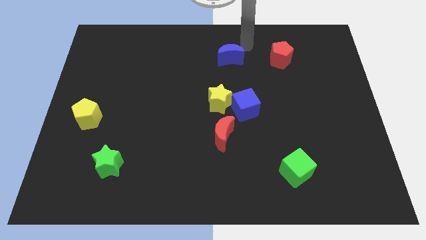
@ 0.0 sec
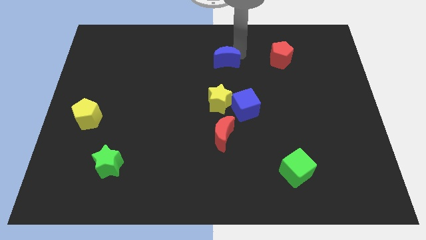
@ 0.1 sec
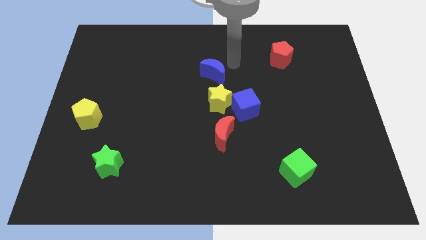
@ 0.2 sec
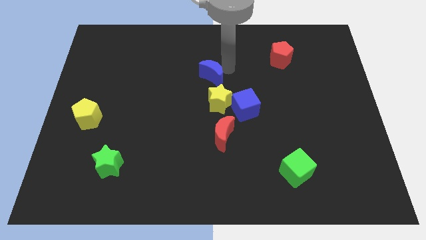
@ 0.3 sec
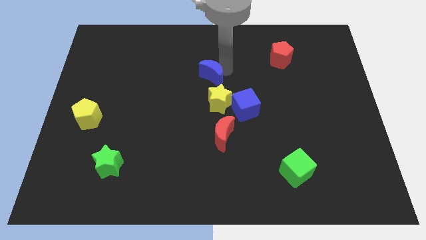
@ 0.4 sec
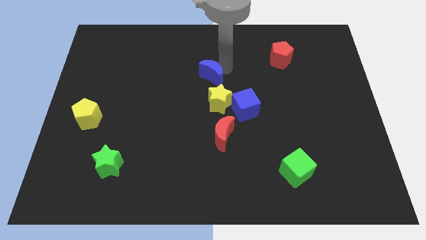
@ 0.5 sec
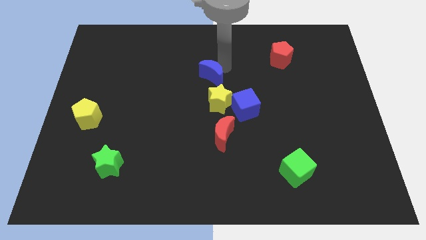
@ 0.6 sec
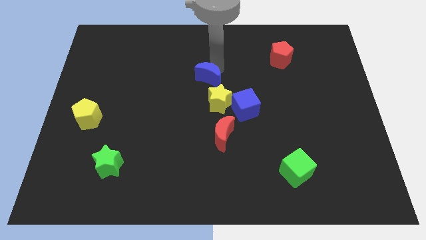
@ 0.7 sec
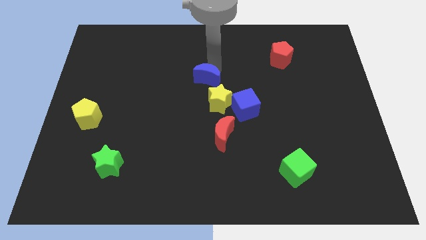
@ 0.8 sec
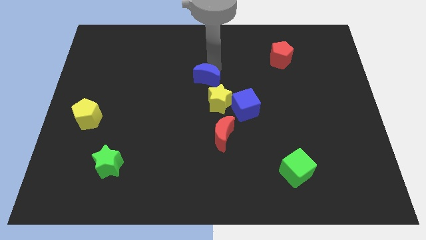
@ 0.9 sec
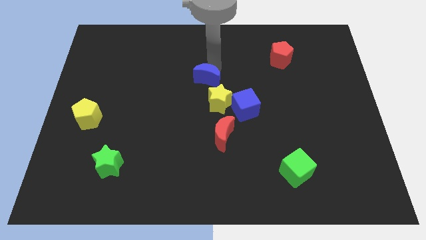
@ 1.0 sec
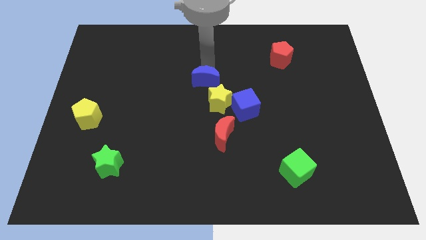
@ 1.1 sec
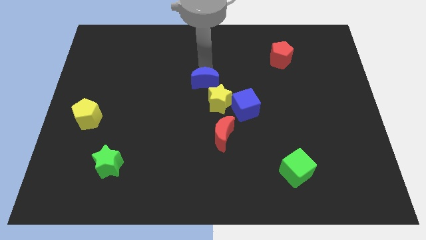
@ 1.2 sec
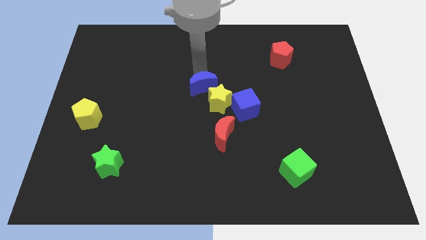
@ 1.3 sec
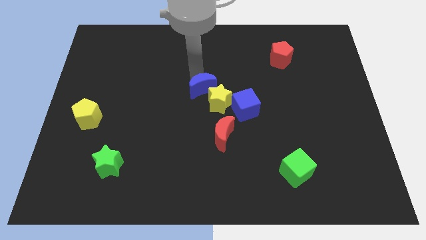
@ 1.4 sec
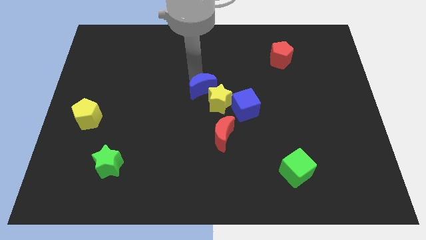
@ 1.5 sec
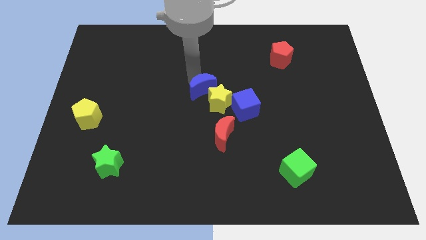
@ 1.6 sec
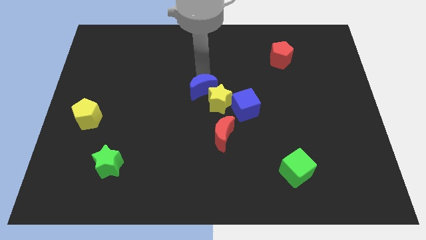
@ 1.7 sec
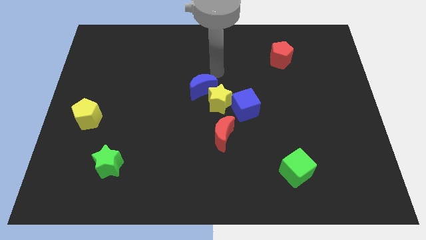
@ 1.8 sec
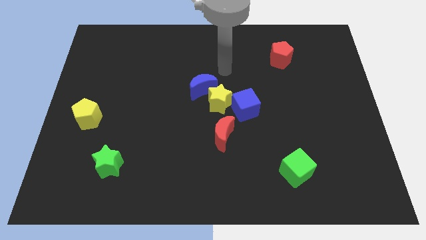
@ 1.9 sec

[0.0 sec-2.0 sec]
push the blue crescent close to the yellow star

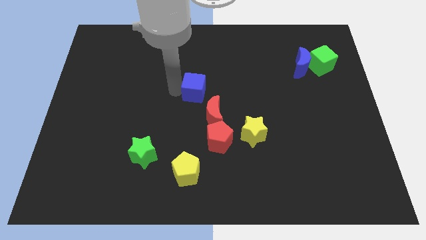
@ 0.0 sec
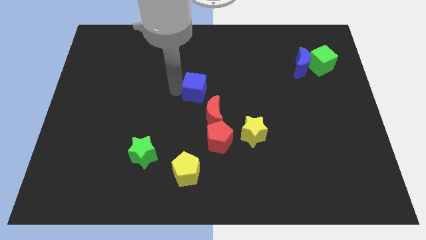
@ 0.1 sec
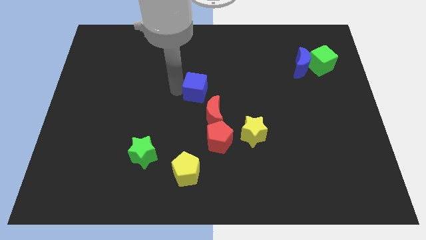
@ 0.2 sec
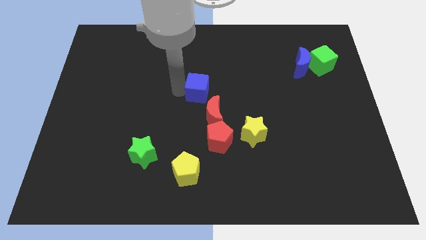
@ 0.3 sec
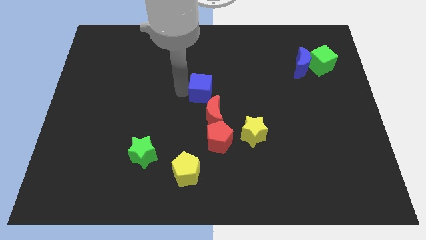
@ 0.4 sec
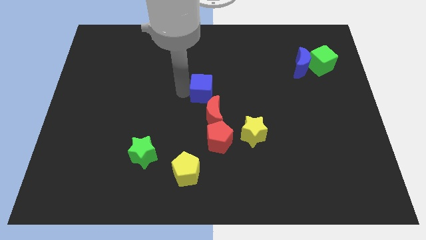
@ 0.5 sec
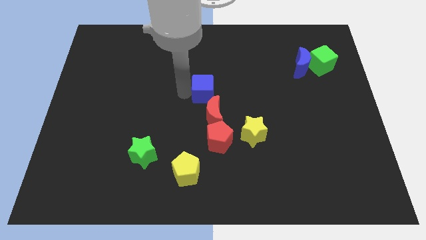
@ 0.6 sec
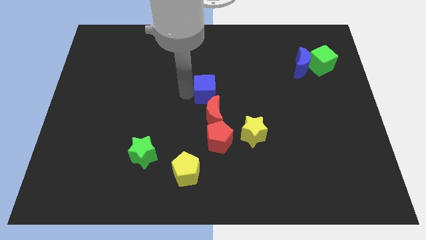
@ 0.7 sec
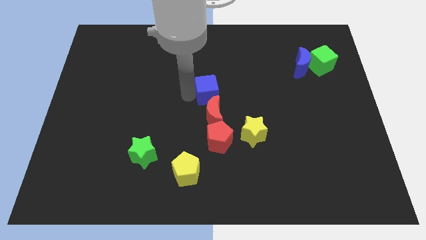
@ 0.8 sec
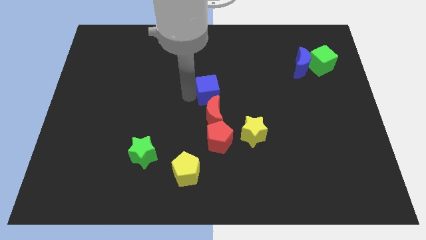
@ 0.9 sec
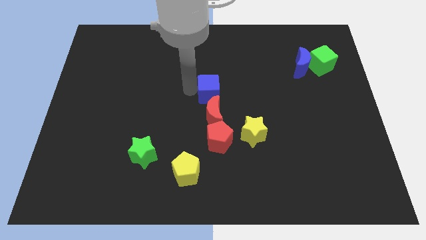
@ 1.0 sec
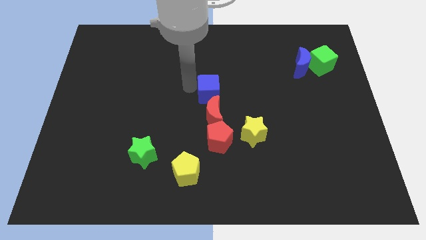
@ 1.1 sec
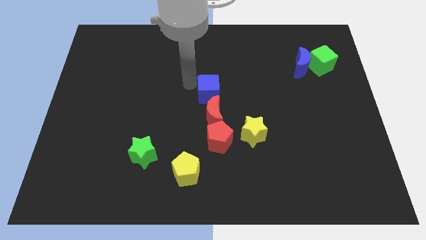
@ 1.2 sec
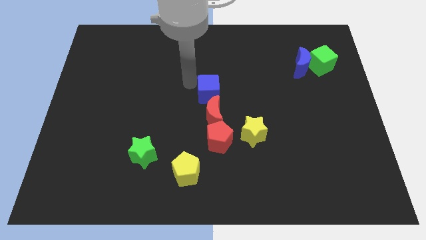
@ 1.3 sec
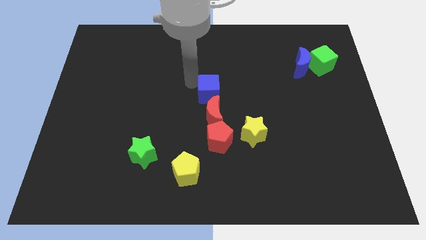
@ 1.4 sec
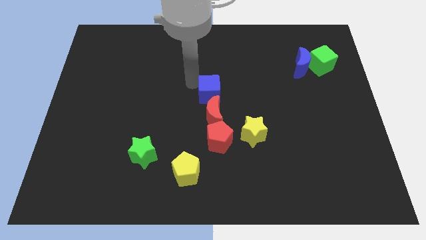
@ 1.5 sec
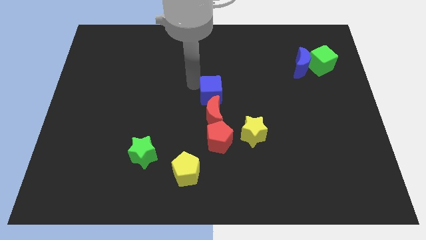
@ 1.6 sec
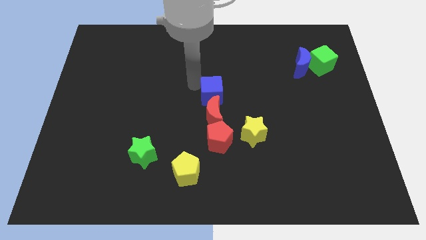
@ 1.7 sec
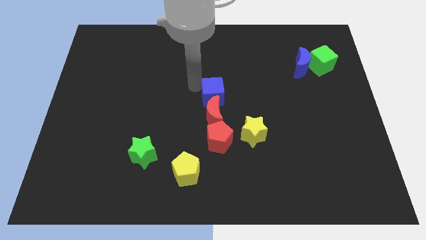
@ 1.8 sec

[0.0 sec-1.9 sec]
push the blue cube to the top of the red crescent

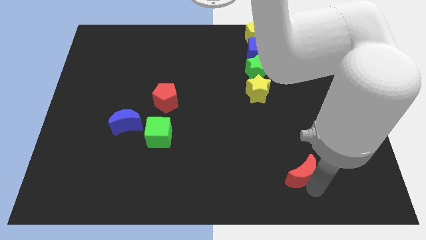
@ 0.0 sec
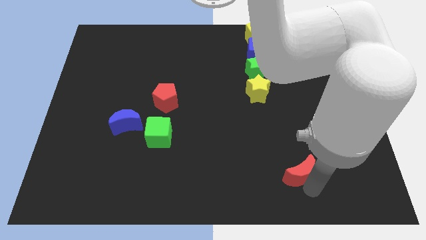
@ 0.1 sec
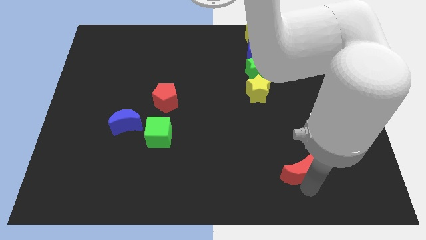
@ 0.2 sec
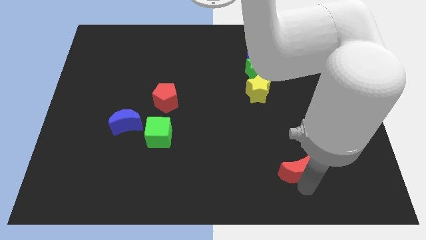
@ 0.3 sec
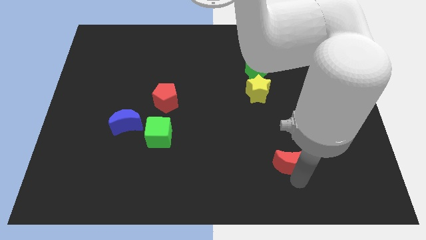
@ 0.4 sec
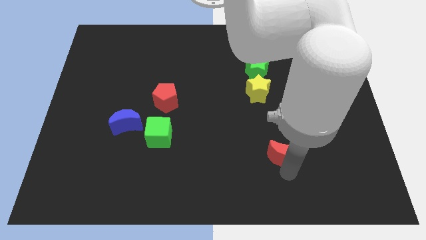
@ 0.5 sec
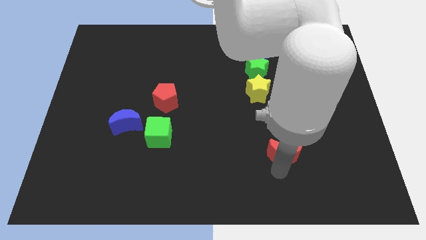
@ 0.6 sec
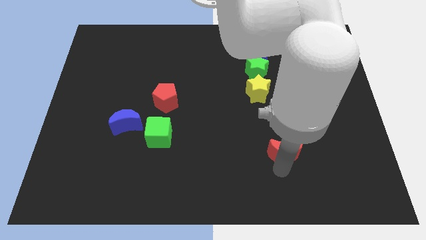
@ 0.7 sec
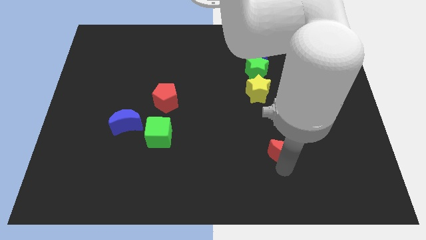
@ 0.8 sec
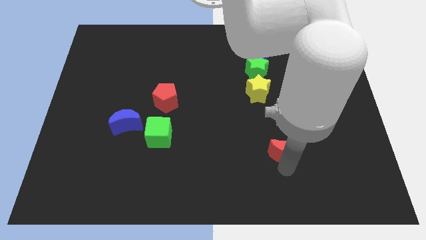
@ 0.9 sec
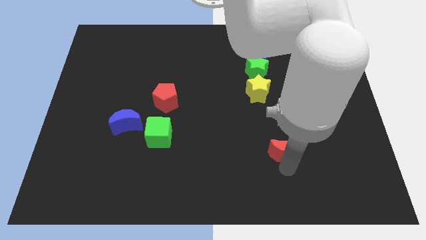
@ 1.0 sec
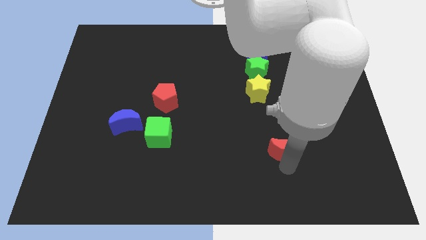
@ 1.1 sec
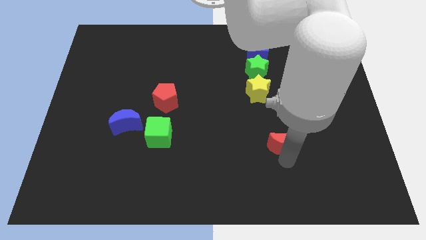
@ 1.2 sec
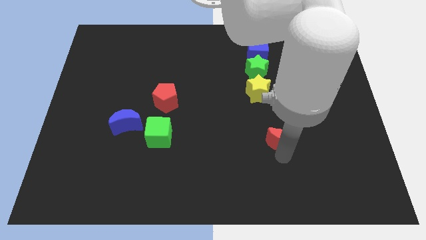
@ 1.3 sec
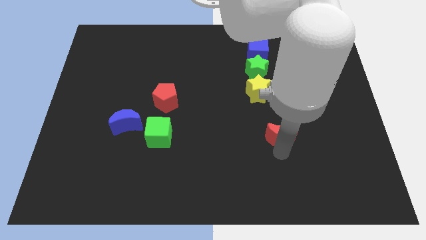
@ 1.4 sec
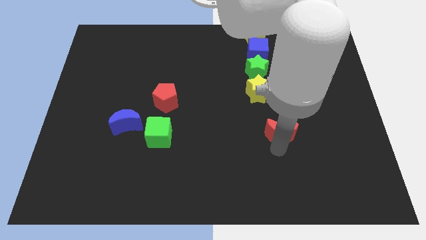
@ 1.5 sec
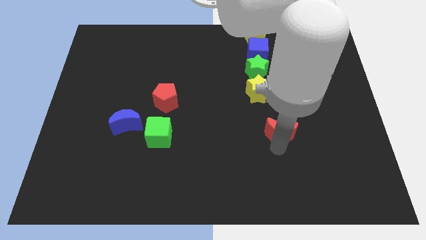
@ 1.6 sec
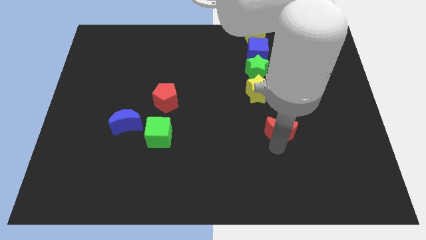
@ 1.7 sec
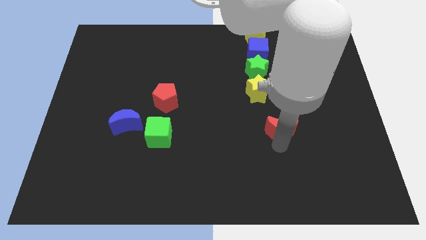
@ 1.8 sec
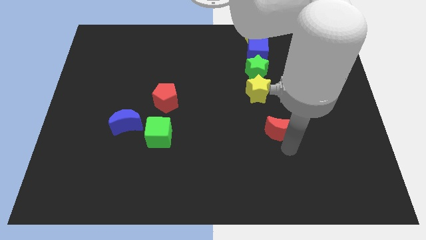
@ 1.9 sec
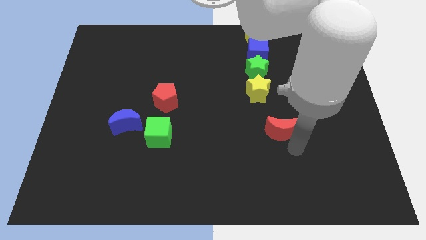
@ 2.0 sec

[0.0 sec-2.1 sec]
slide red moon to the right of green cube

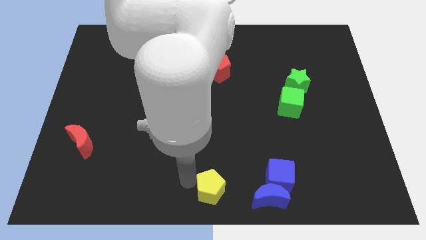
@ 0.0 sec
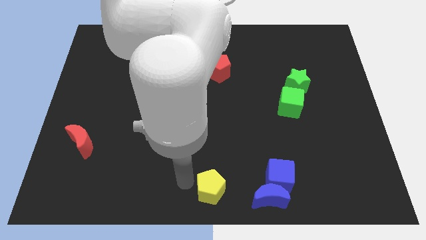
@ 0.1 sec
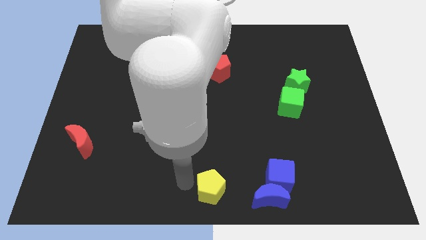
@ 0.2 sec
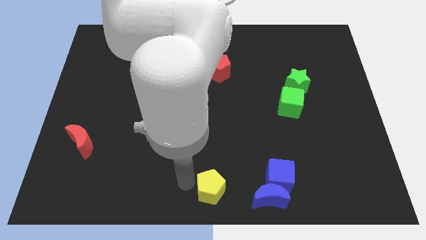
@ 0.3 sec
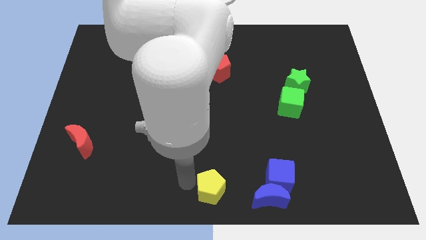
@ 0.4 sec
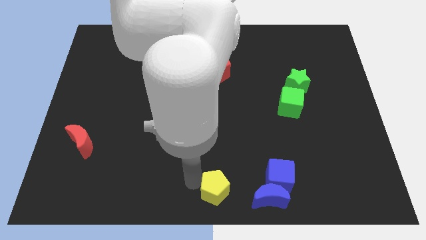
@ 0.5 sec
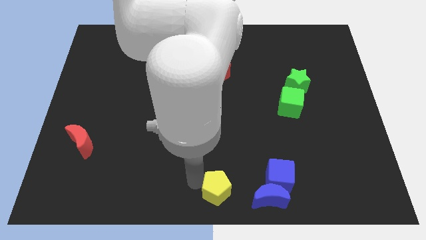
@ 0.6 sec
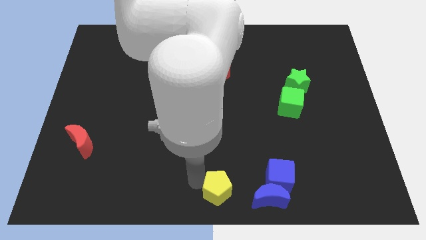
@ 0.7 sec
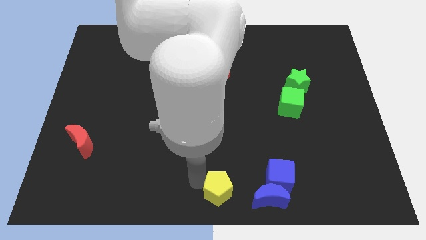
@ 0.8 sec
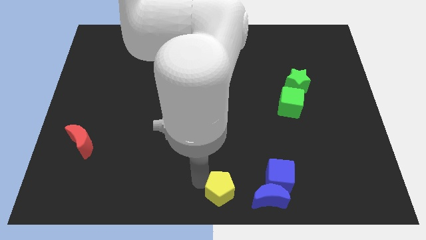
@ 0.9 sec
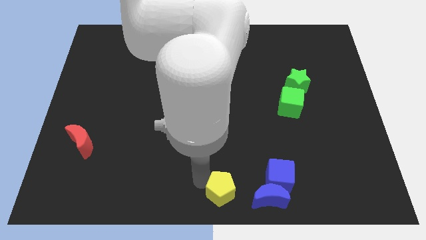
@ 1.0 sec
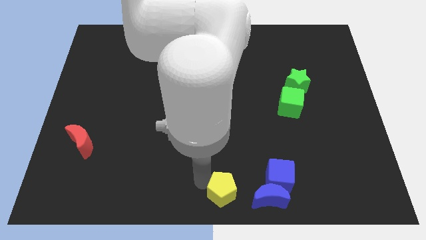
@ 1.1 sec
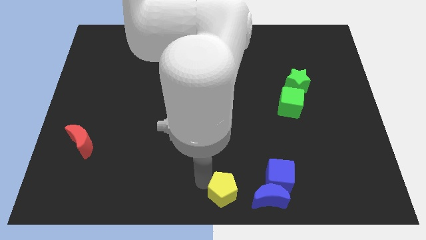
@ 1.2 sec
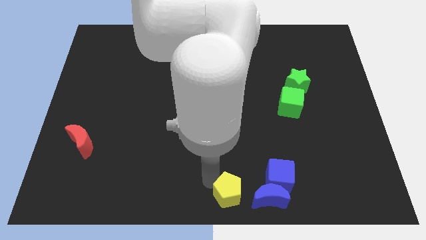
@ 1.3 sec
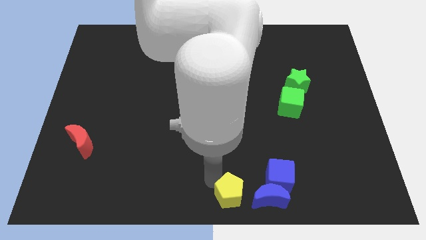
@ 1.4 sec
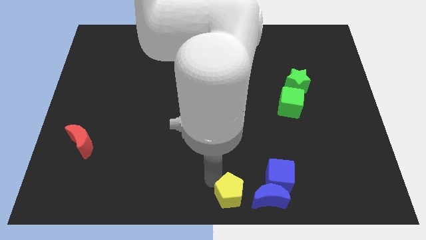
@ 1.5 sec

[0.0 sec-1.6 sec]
move the yellow pentagon close to the left side of the blue crescent

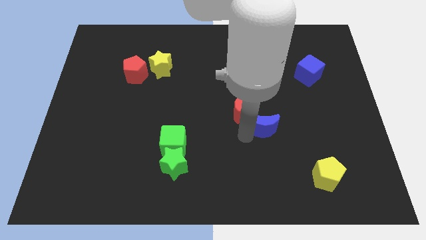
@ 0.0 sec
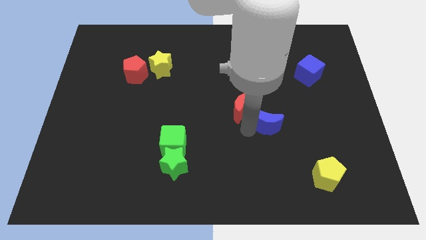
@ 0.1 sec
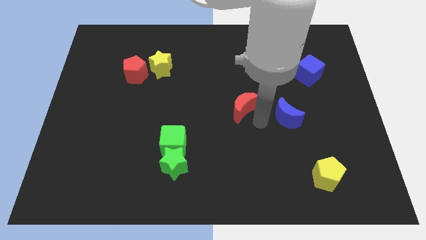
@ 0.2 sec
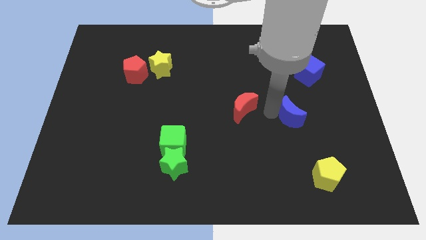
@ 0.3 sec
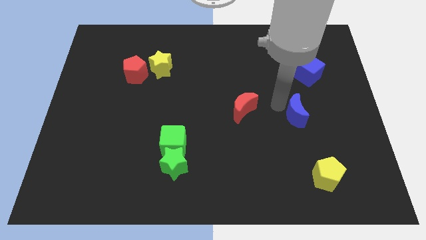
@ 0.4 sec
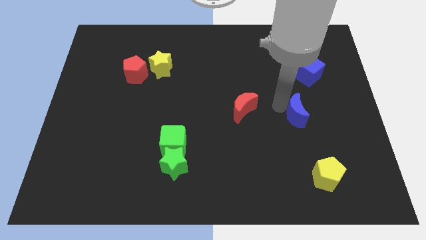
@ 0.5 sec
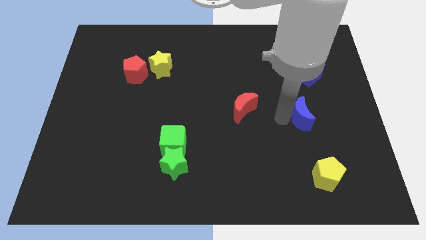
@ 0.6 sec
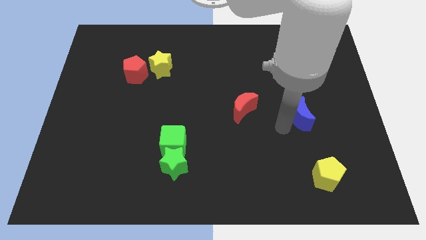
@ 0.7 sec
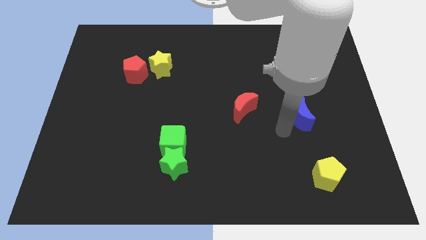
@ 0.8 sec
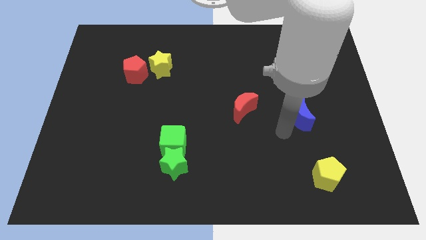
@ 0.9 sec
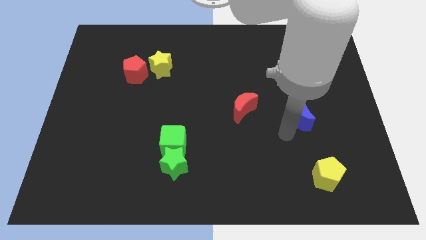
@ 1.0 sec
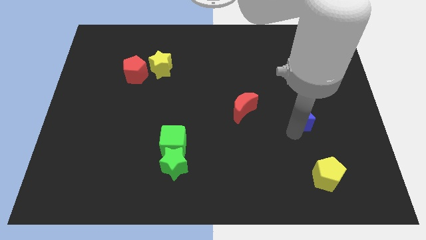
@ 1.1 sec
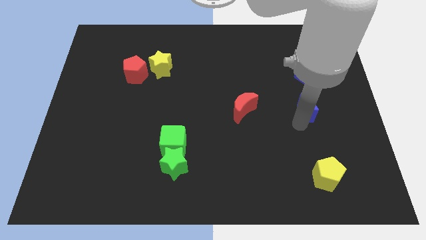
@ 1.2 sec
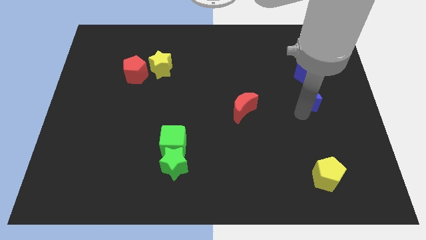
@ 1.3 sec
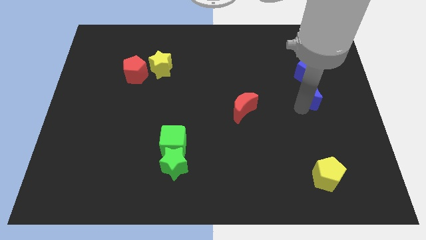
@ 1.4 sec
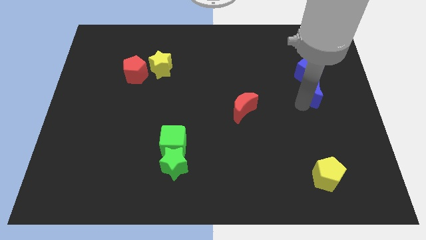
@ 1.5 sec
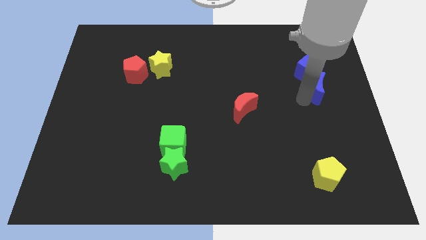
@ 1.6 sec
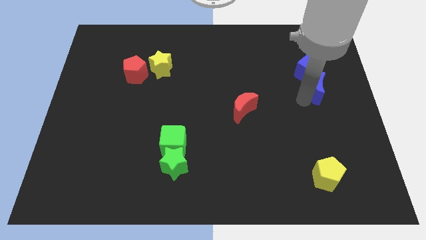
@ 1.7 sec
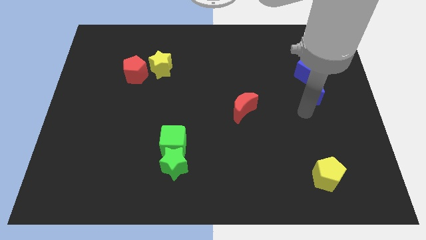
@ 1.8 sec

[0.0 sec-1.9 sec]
push the blue crescent left bottom of the blue cube
